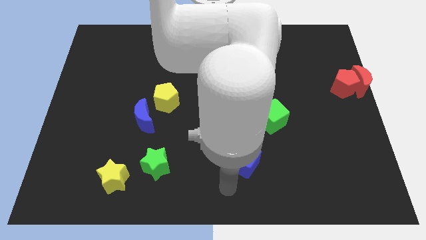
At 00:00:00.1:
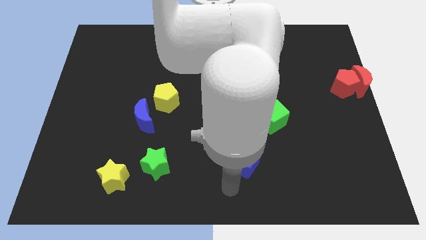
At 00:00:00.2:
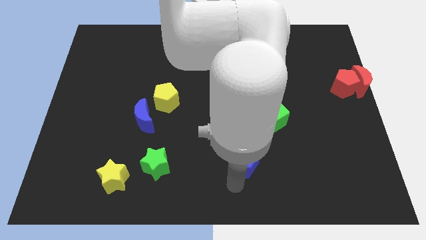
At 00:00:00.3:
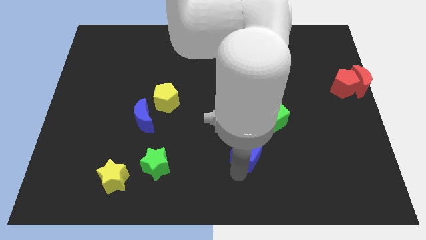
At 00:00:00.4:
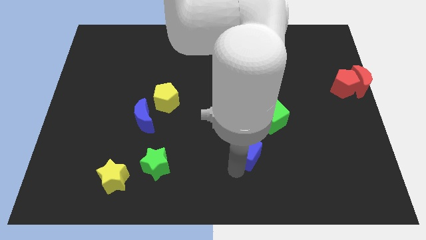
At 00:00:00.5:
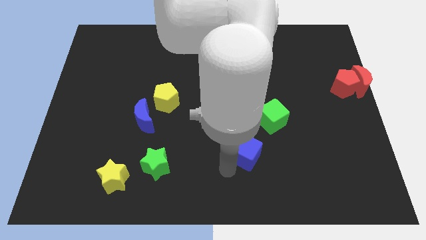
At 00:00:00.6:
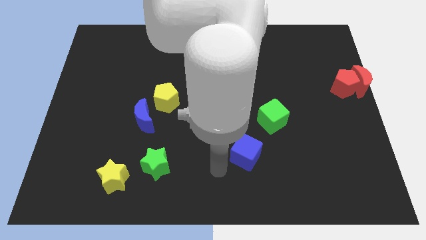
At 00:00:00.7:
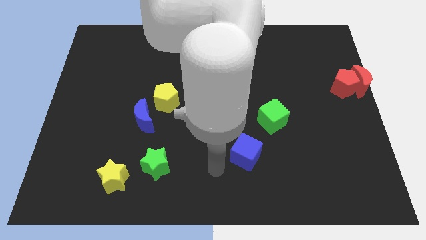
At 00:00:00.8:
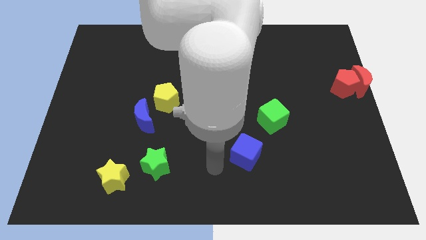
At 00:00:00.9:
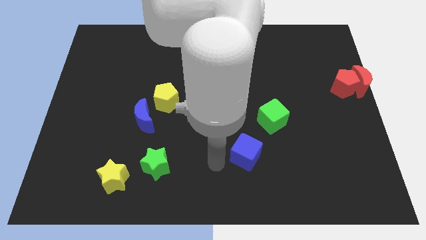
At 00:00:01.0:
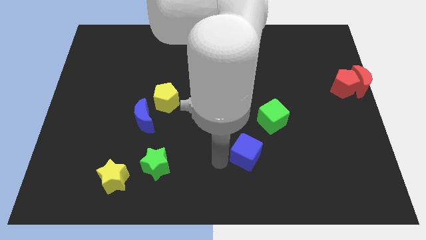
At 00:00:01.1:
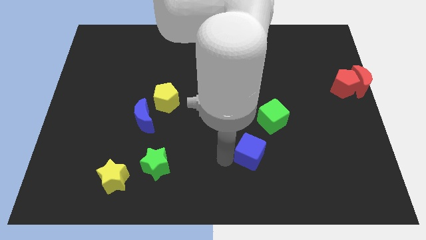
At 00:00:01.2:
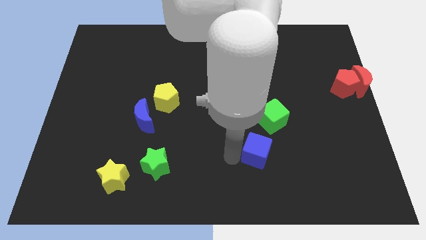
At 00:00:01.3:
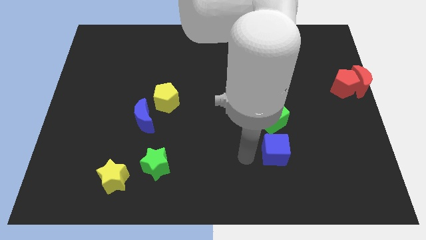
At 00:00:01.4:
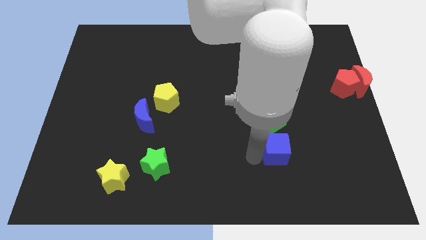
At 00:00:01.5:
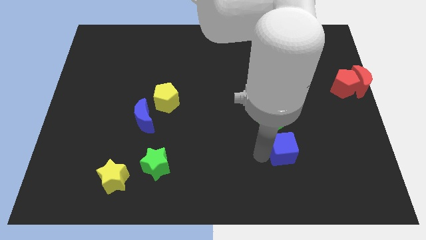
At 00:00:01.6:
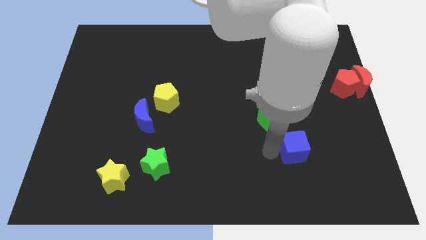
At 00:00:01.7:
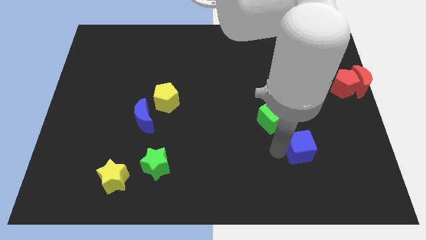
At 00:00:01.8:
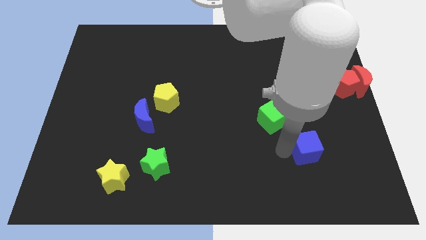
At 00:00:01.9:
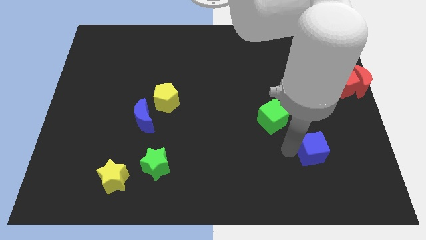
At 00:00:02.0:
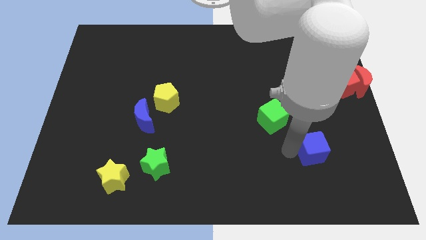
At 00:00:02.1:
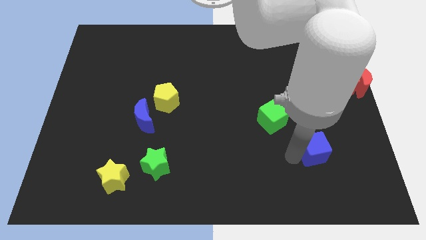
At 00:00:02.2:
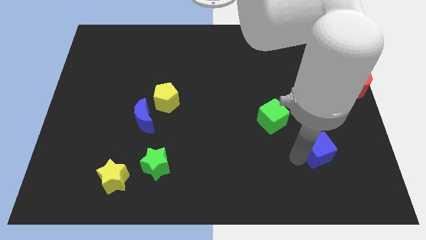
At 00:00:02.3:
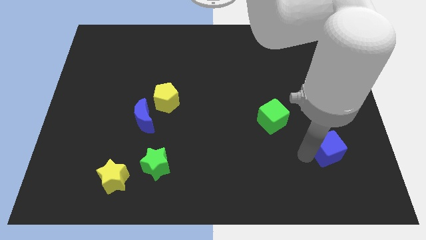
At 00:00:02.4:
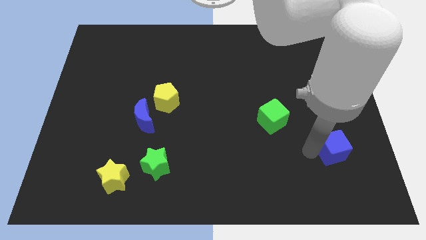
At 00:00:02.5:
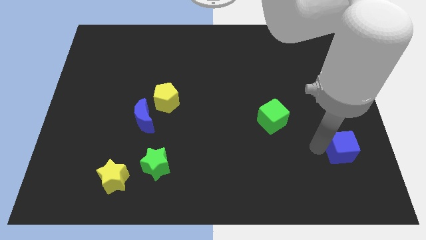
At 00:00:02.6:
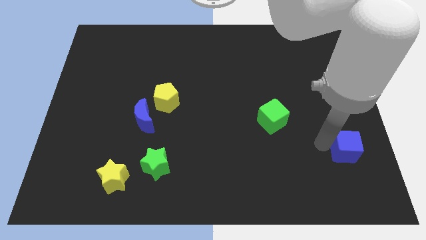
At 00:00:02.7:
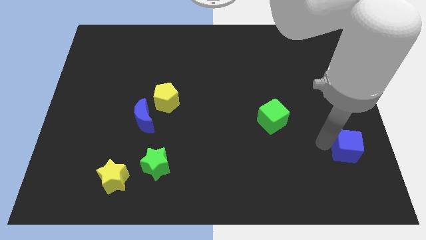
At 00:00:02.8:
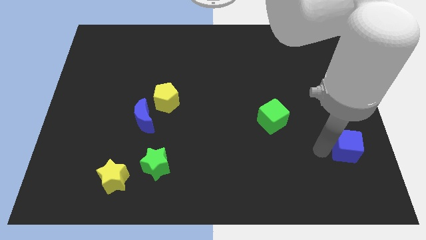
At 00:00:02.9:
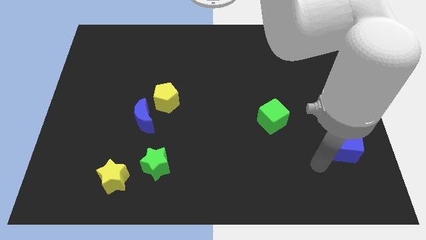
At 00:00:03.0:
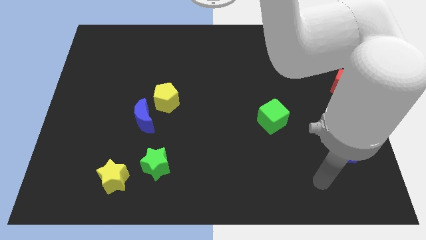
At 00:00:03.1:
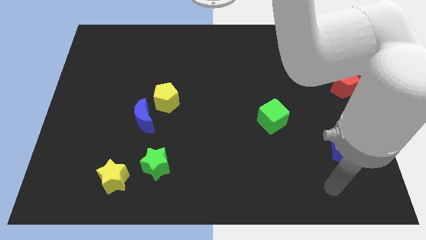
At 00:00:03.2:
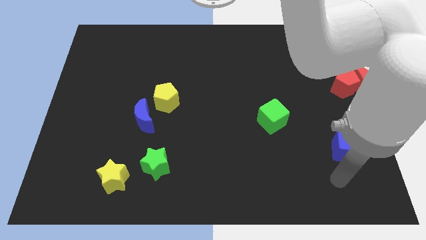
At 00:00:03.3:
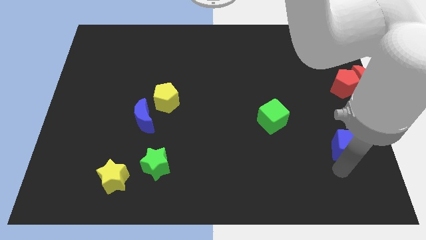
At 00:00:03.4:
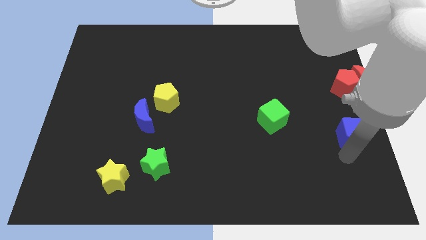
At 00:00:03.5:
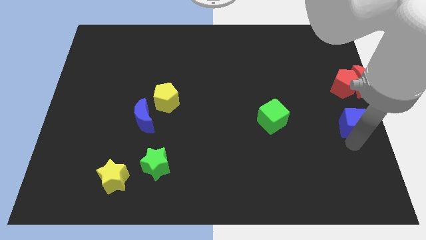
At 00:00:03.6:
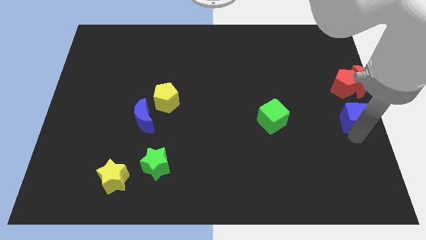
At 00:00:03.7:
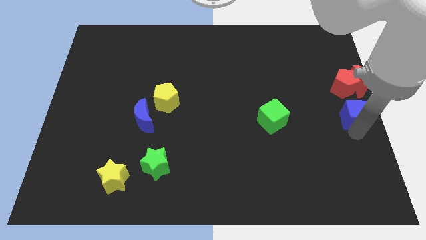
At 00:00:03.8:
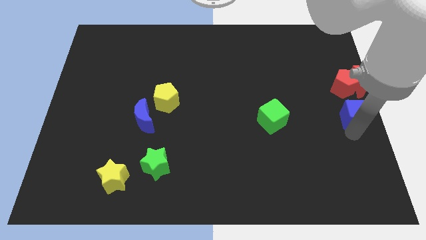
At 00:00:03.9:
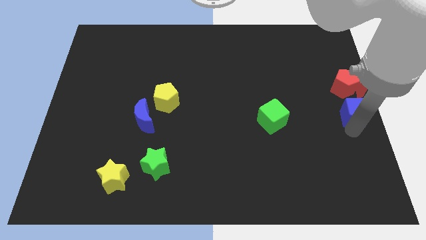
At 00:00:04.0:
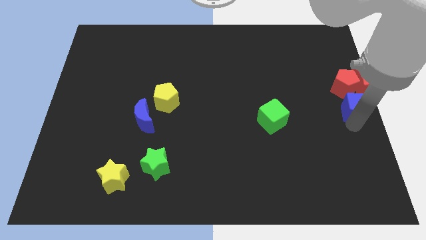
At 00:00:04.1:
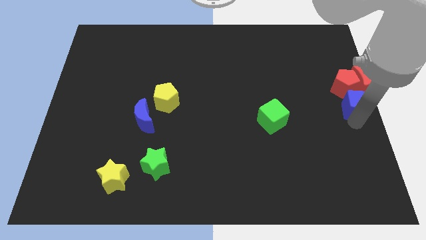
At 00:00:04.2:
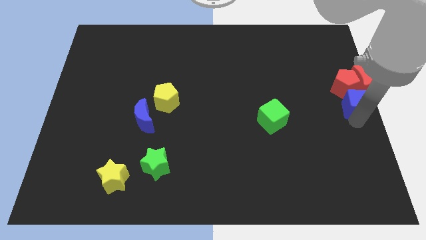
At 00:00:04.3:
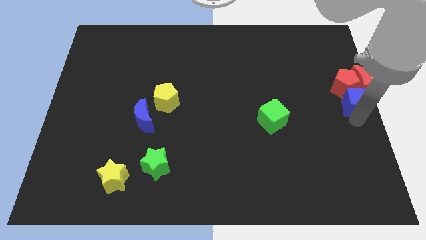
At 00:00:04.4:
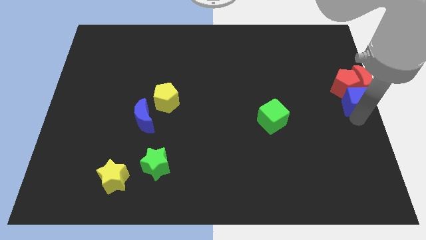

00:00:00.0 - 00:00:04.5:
place the blue block into the group of red blocks

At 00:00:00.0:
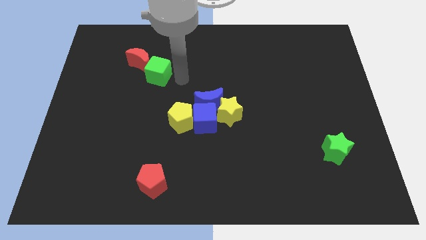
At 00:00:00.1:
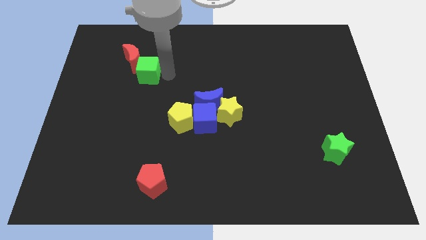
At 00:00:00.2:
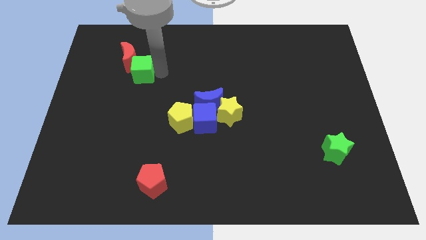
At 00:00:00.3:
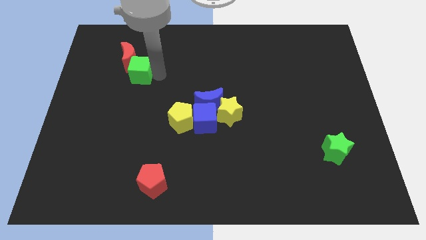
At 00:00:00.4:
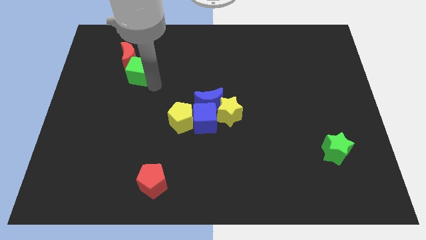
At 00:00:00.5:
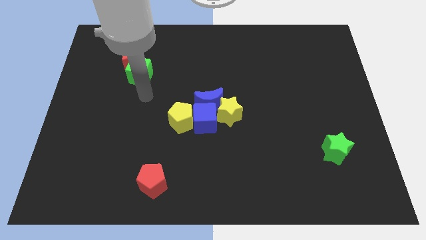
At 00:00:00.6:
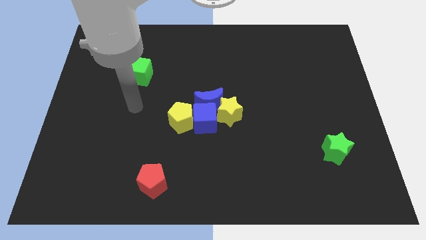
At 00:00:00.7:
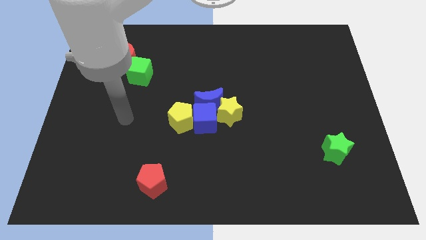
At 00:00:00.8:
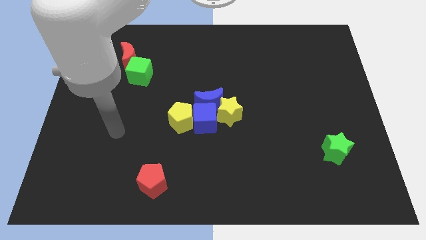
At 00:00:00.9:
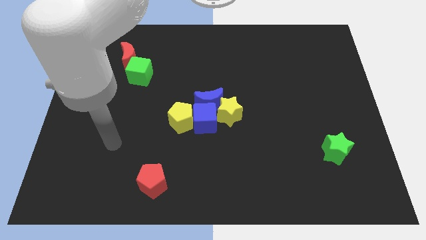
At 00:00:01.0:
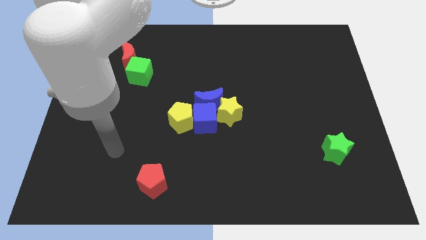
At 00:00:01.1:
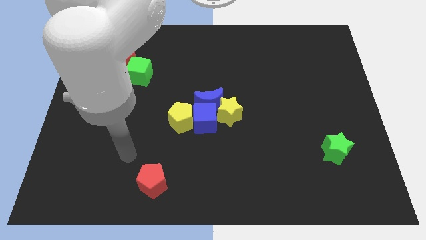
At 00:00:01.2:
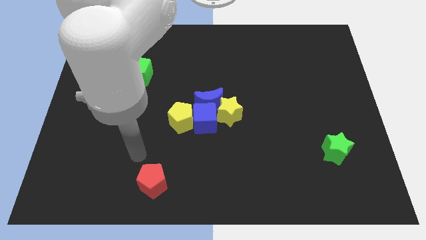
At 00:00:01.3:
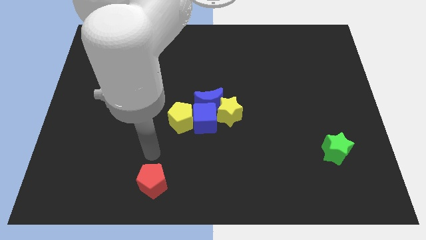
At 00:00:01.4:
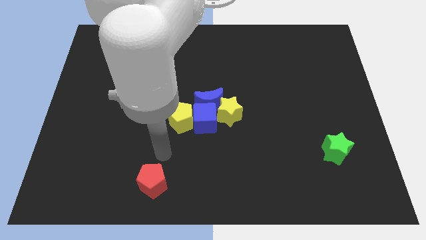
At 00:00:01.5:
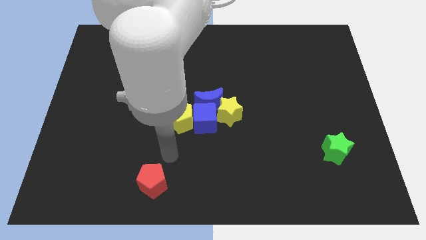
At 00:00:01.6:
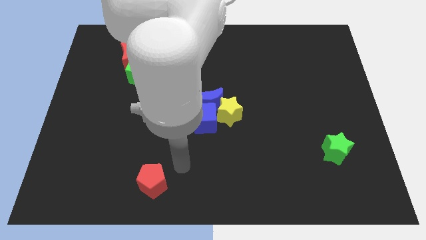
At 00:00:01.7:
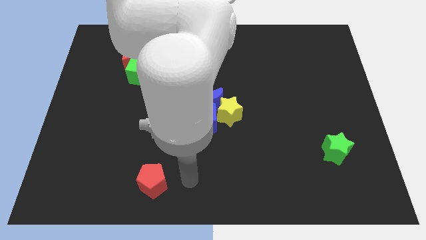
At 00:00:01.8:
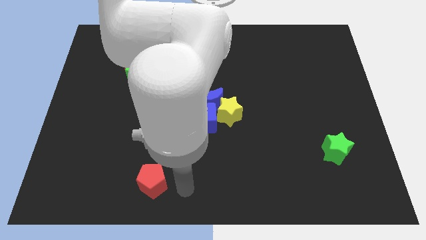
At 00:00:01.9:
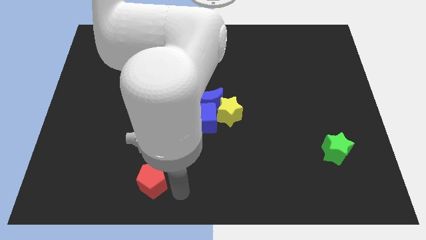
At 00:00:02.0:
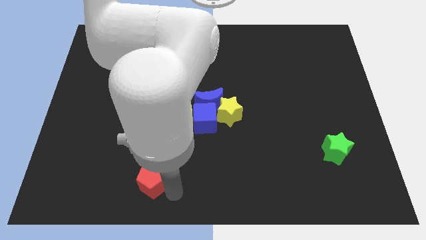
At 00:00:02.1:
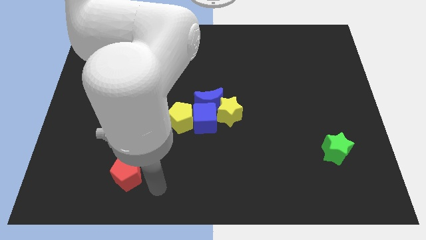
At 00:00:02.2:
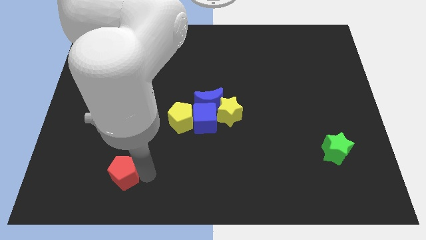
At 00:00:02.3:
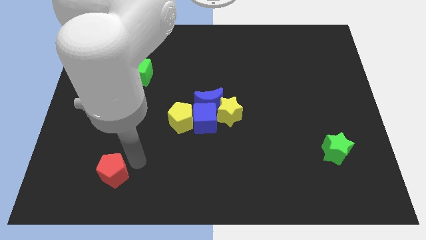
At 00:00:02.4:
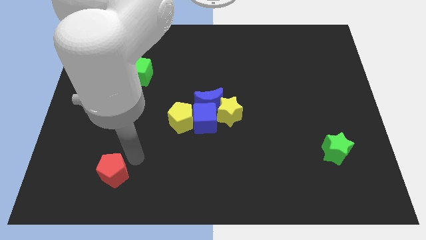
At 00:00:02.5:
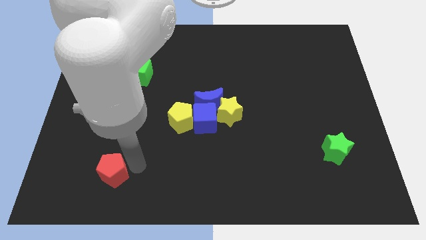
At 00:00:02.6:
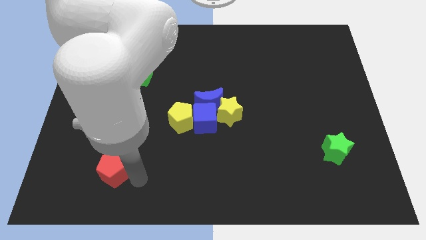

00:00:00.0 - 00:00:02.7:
push red pentagon slightly towards the left side

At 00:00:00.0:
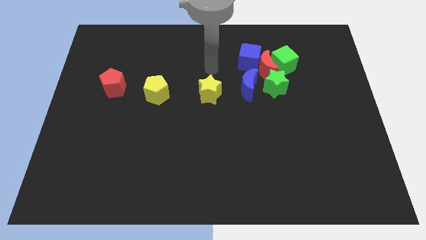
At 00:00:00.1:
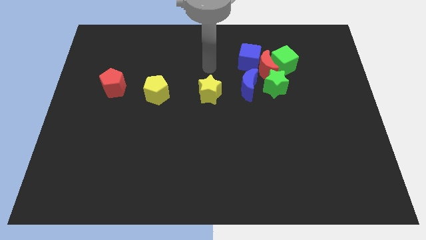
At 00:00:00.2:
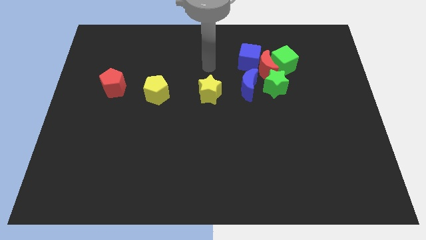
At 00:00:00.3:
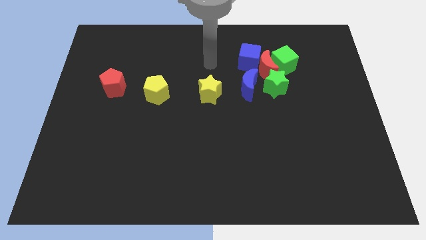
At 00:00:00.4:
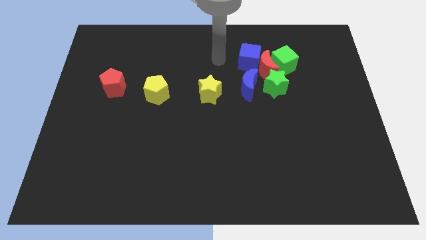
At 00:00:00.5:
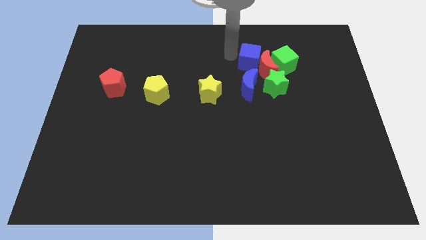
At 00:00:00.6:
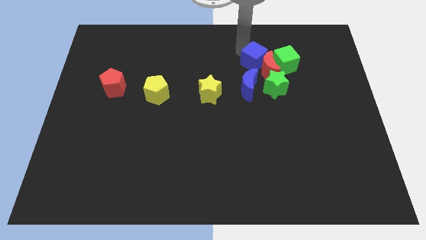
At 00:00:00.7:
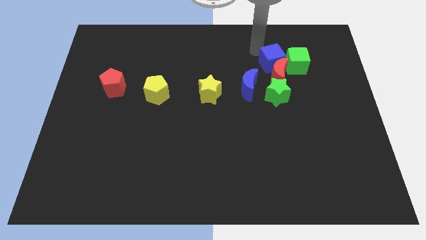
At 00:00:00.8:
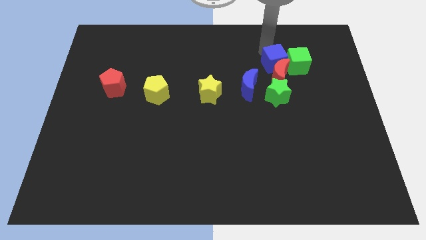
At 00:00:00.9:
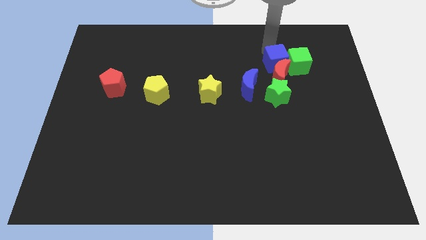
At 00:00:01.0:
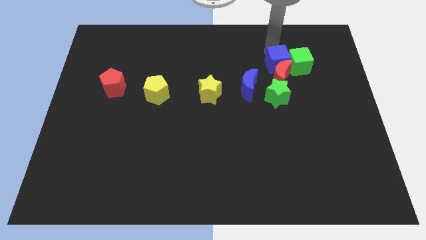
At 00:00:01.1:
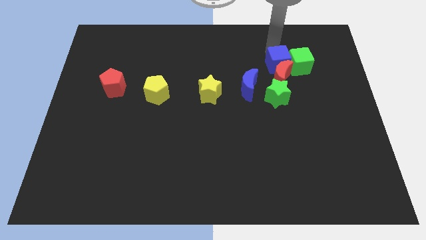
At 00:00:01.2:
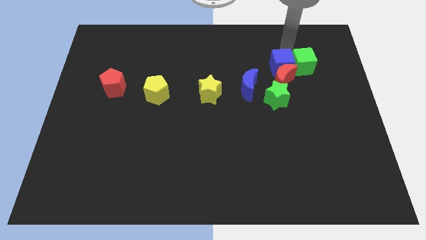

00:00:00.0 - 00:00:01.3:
push the blue cube above the red moon

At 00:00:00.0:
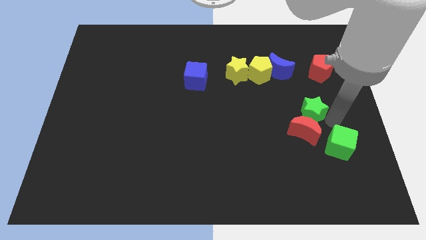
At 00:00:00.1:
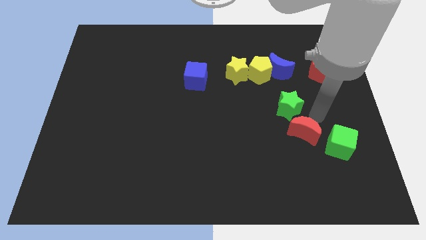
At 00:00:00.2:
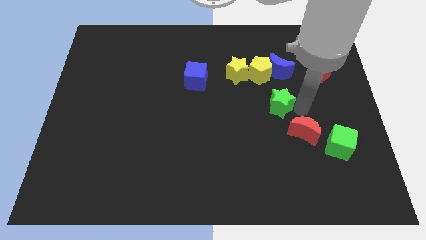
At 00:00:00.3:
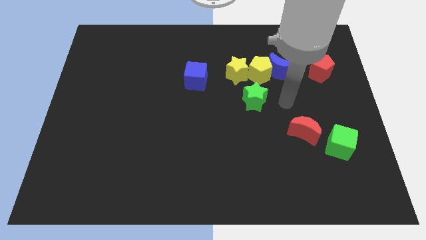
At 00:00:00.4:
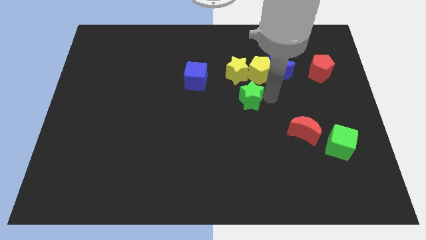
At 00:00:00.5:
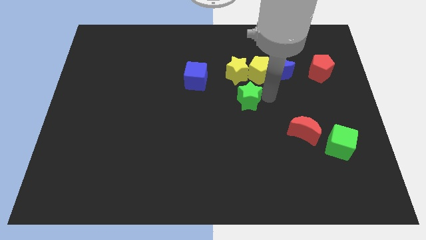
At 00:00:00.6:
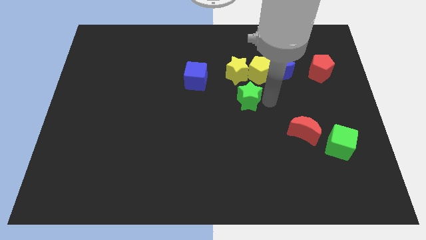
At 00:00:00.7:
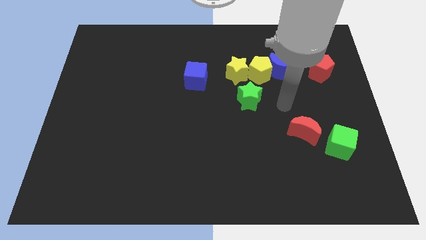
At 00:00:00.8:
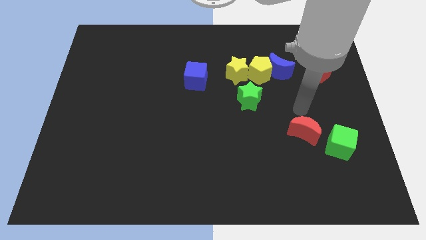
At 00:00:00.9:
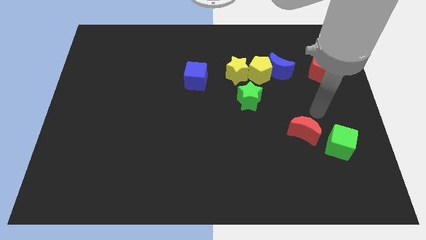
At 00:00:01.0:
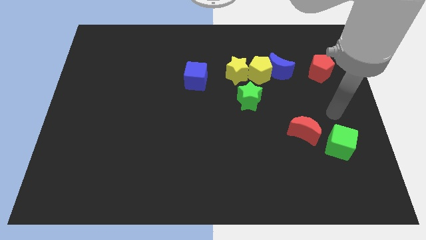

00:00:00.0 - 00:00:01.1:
push the green star below the yellow star
